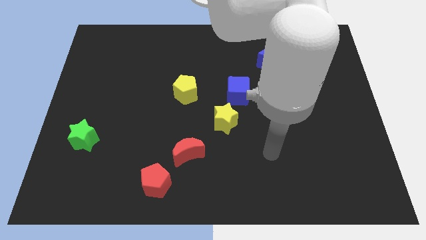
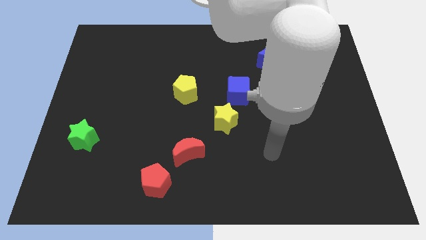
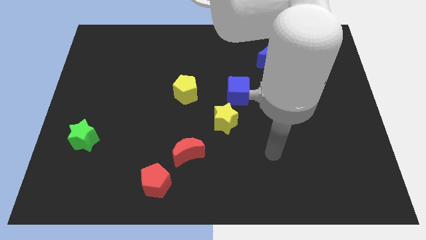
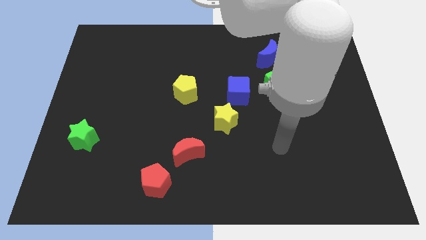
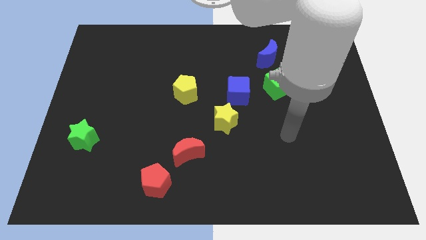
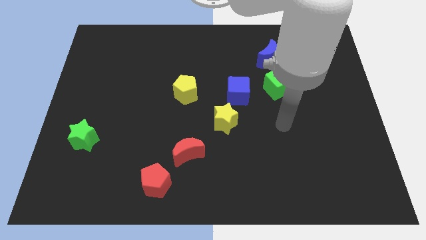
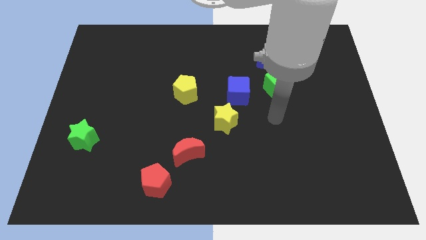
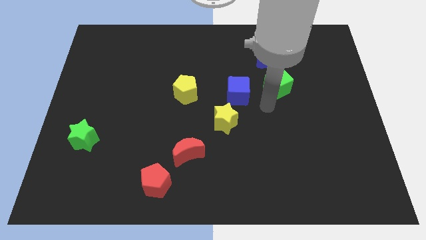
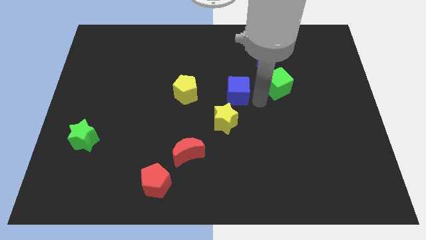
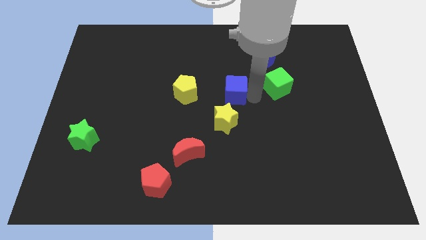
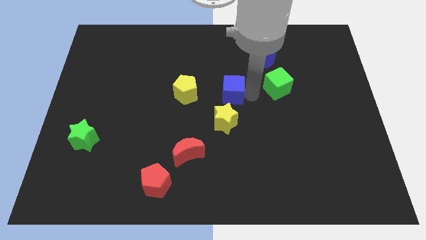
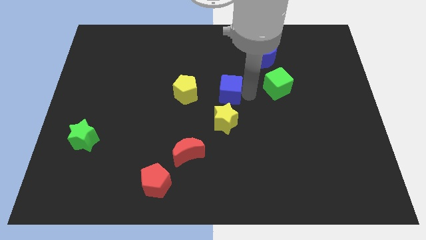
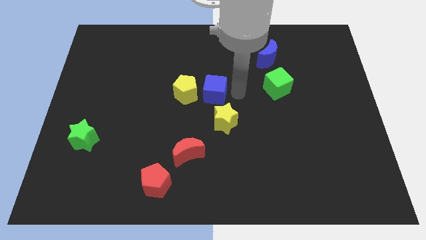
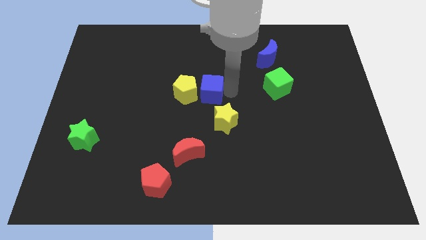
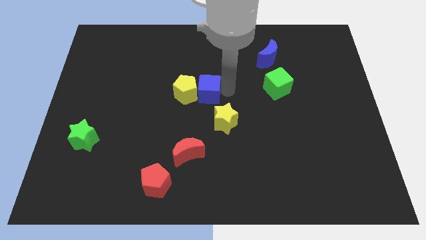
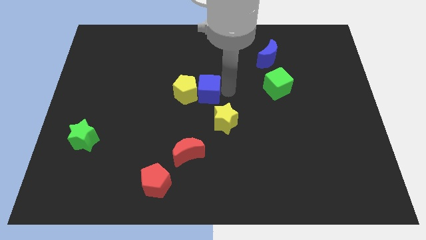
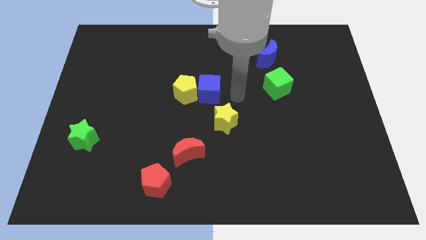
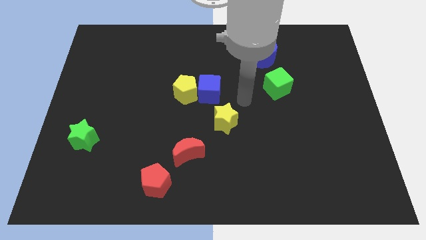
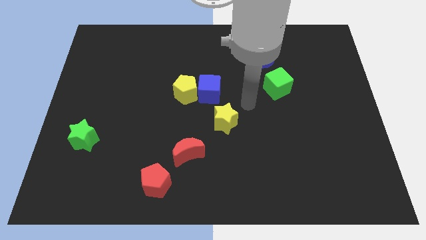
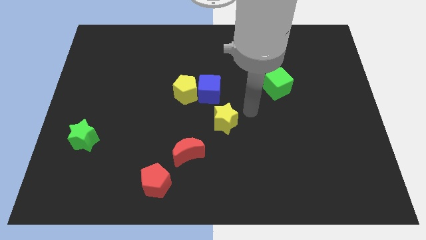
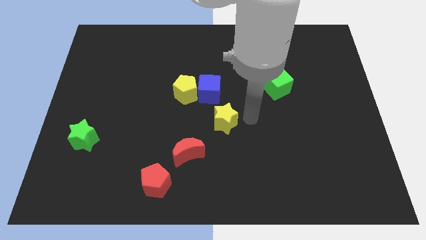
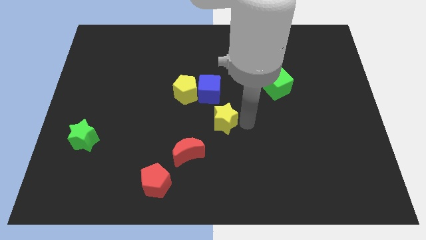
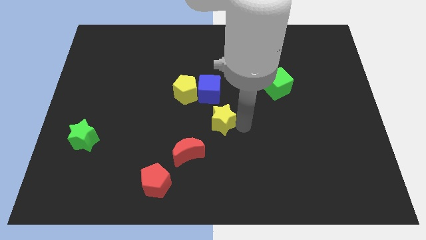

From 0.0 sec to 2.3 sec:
move blue cube towards yellow pentagon

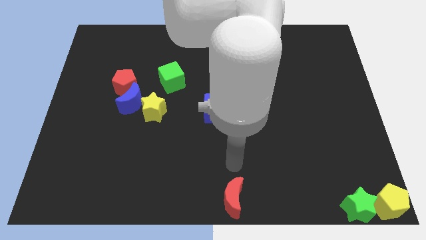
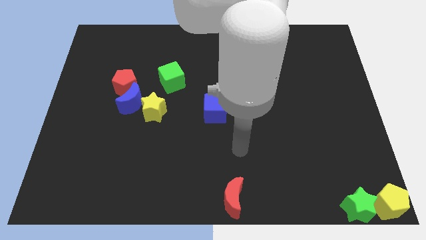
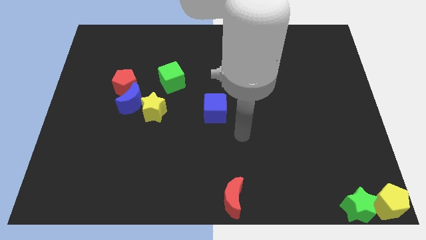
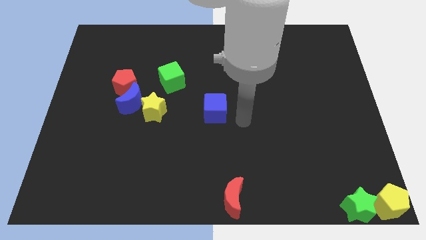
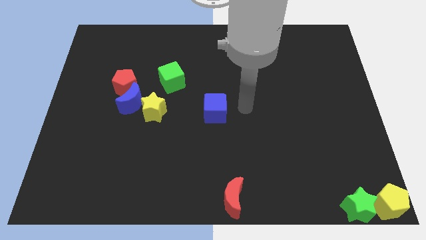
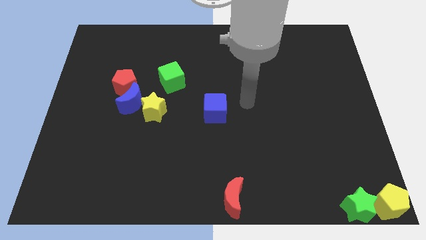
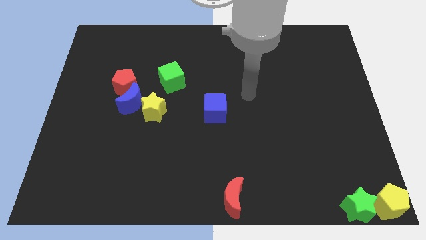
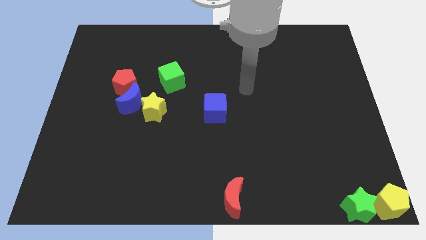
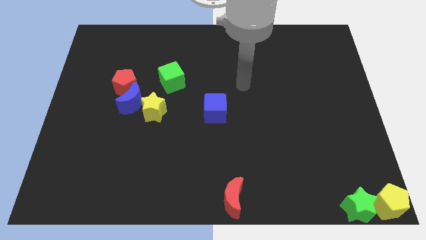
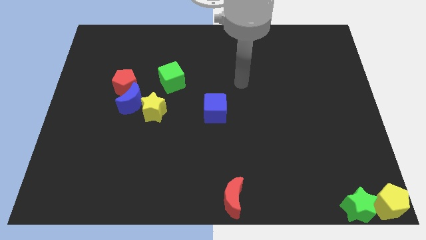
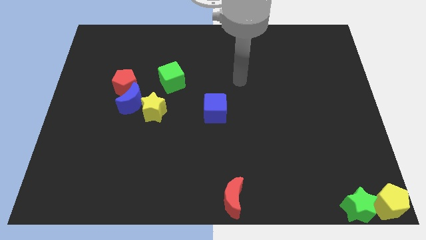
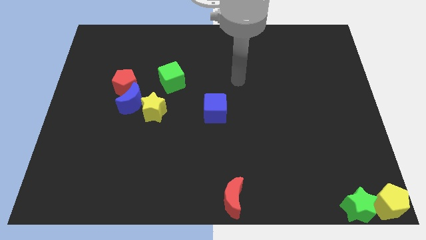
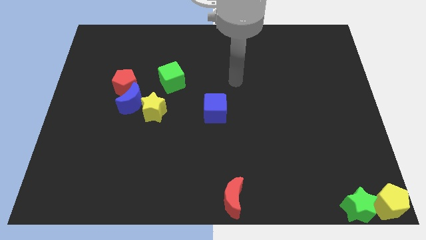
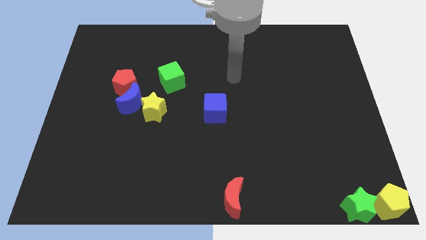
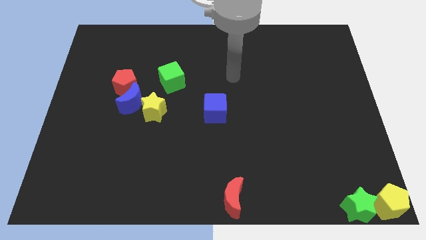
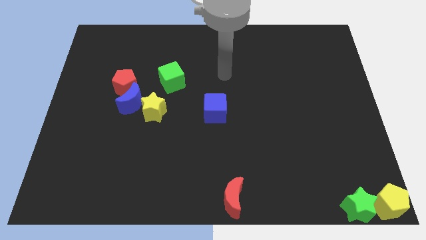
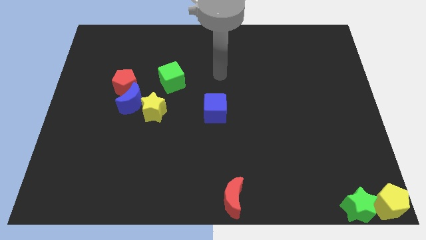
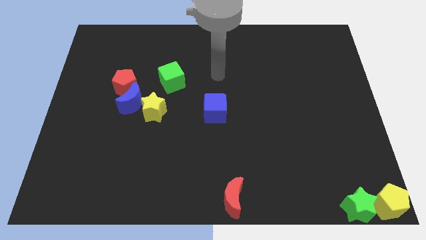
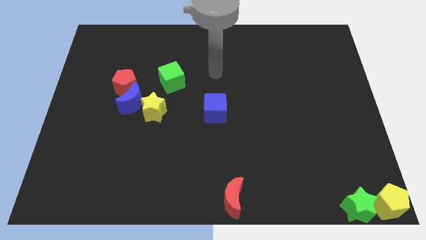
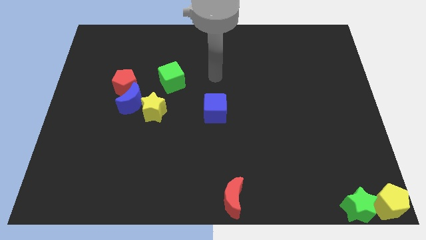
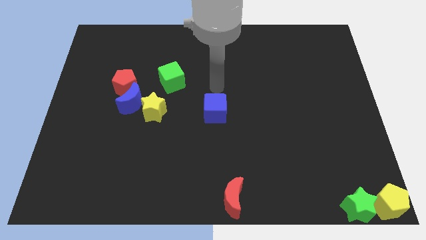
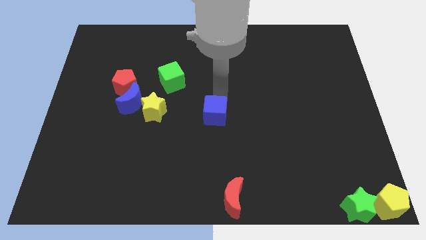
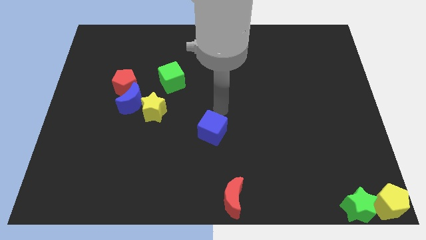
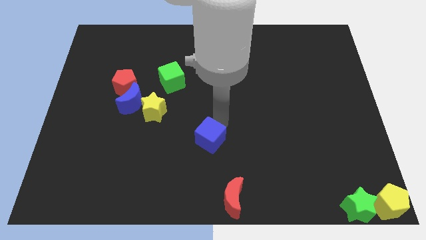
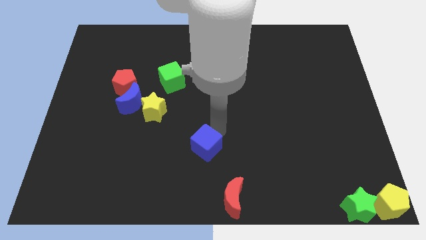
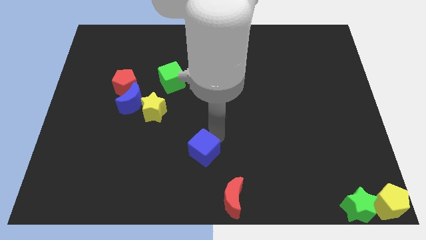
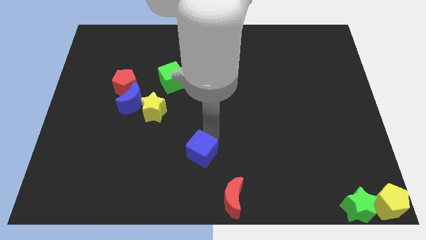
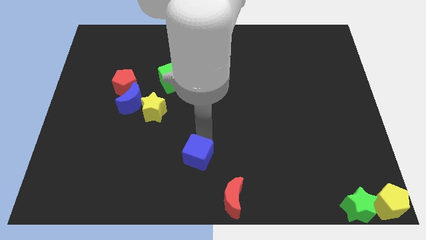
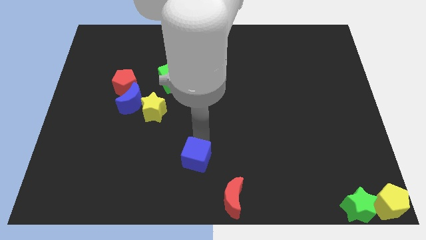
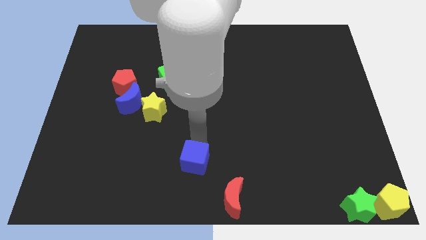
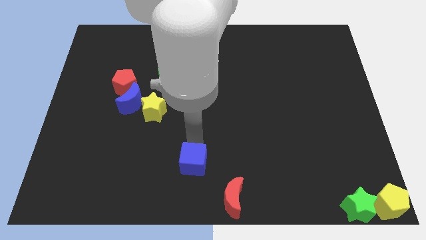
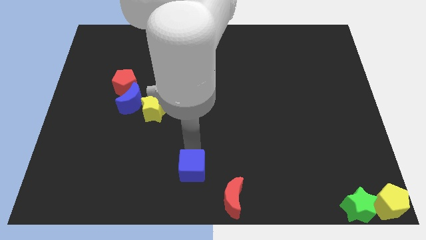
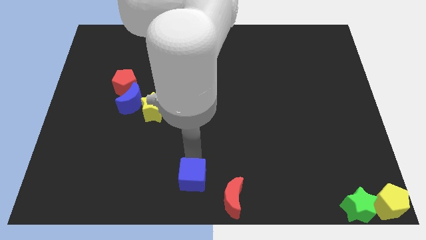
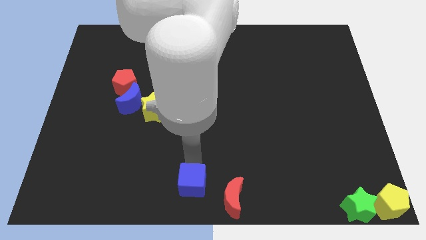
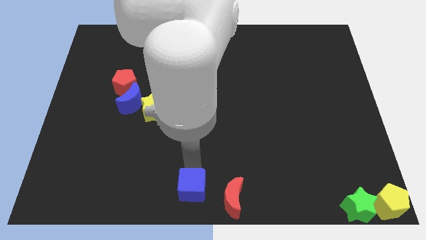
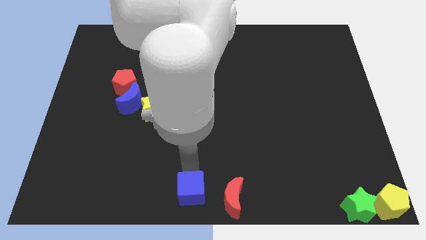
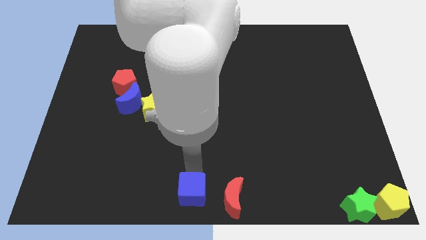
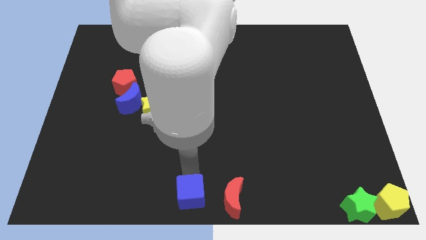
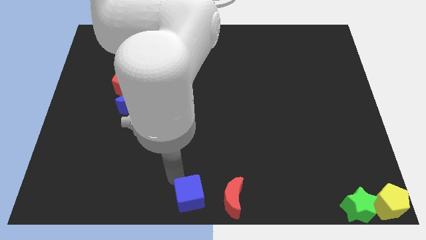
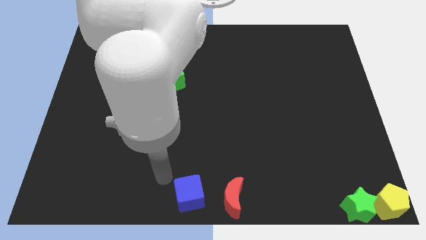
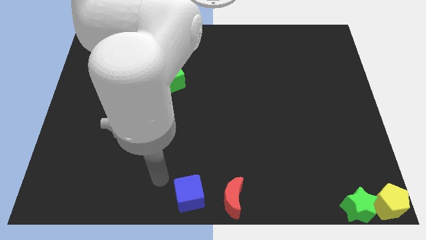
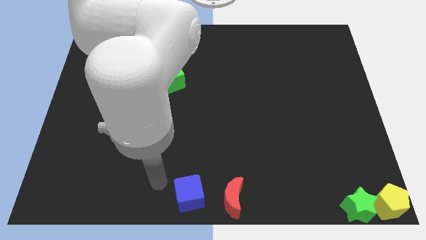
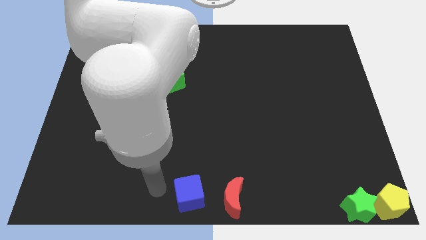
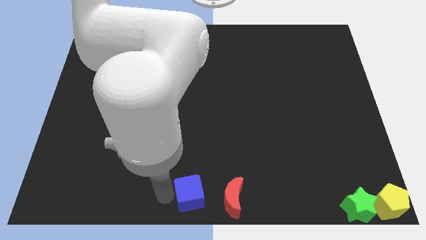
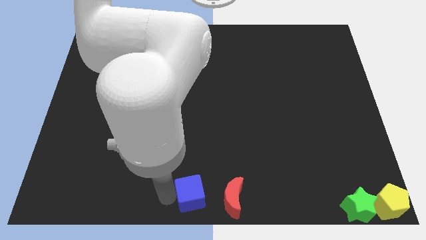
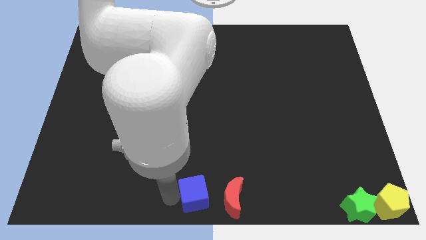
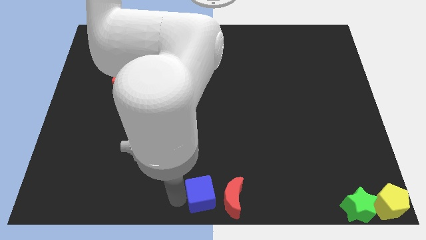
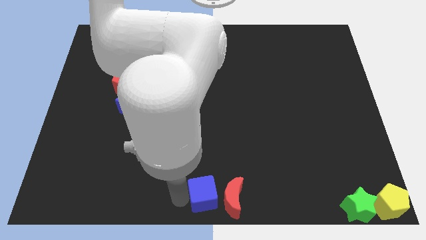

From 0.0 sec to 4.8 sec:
push the blue cube to the left of the red crescent

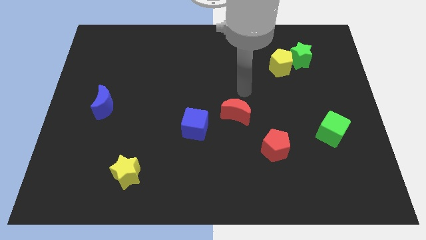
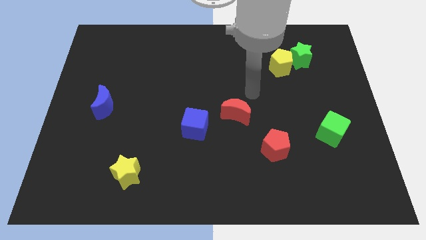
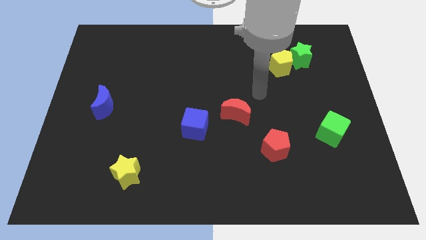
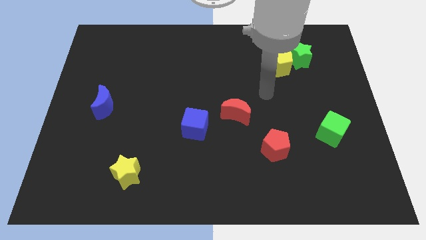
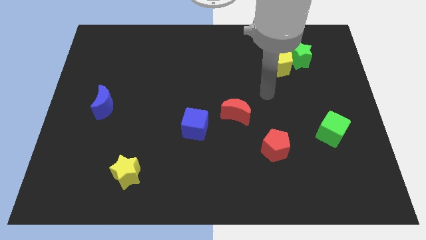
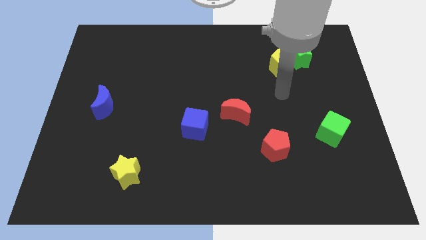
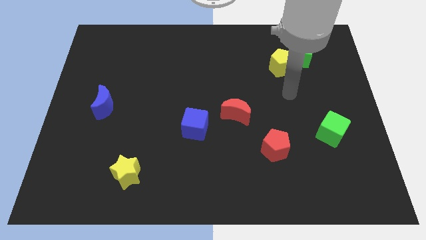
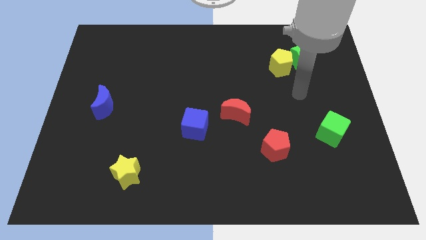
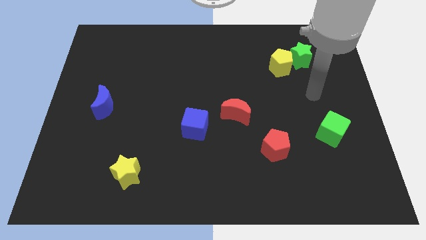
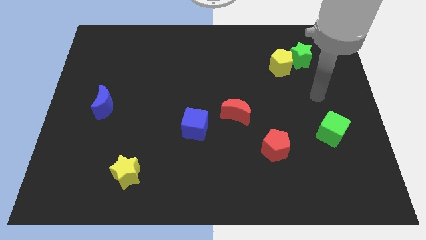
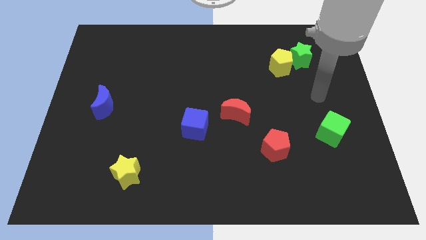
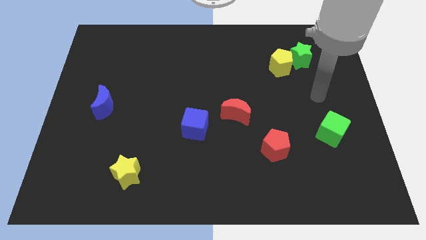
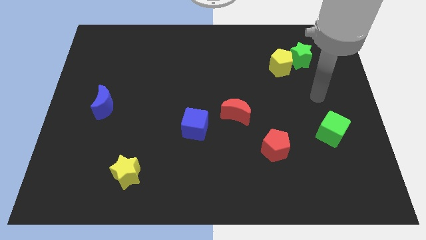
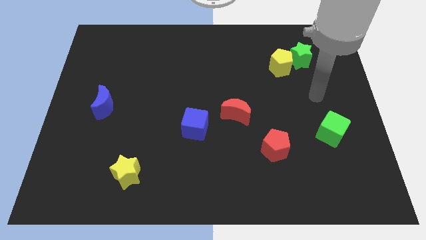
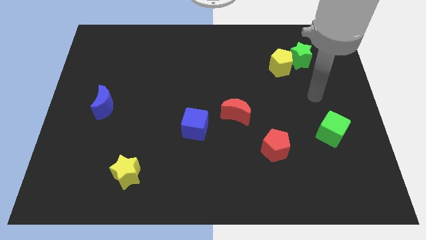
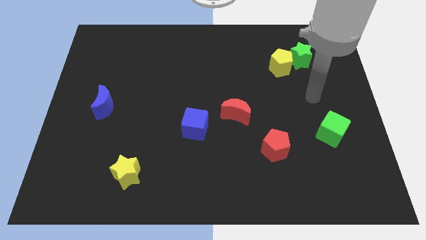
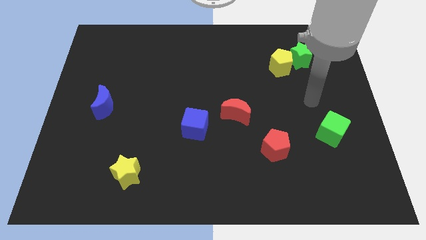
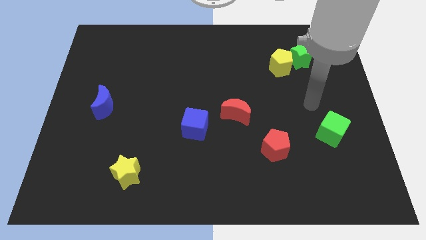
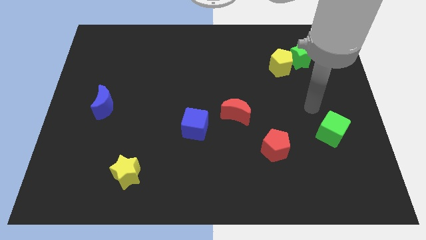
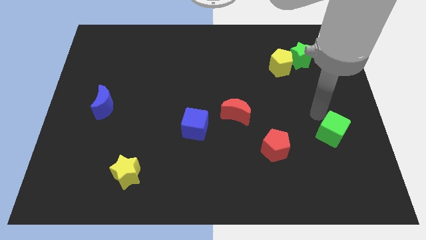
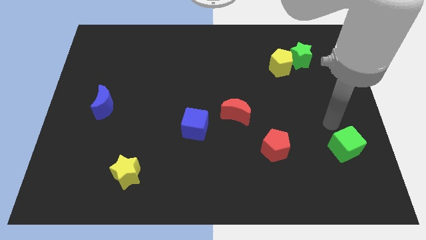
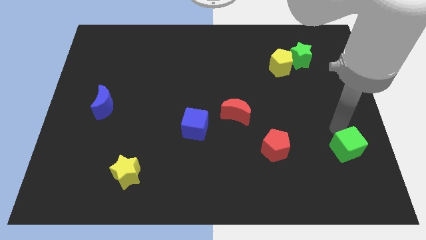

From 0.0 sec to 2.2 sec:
move green cube slightly down
